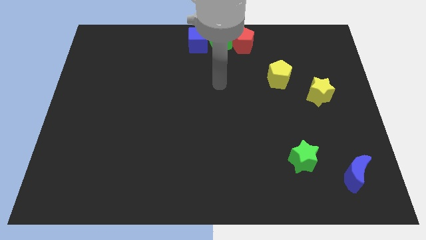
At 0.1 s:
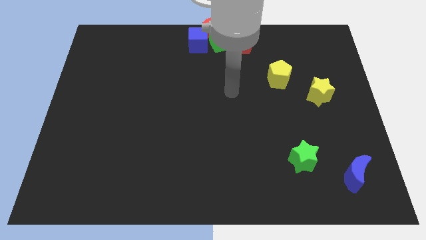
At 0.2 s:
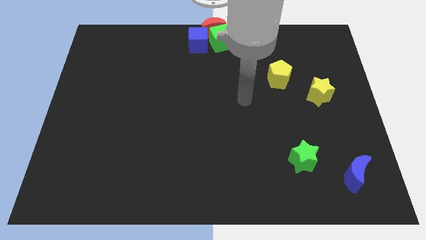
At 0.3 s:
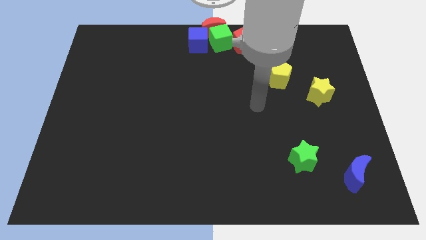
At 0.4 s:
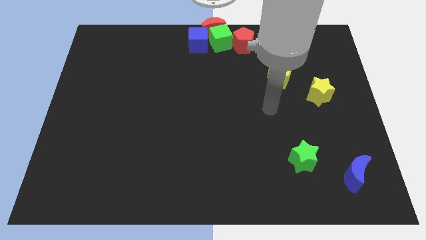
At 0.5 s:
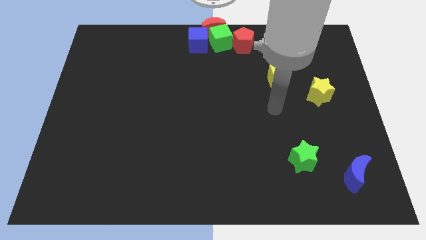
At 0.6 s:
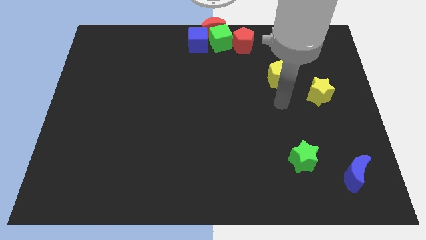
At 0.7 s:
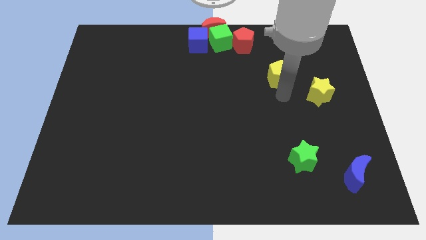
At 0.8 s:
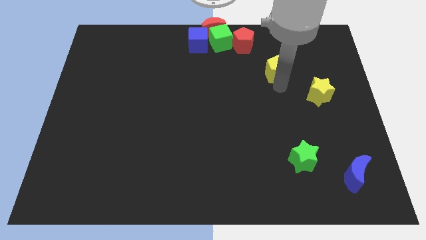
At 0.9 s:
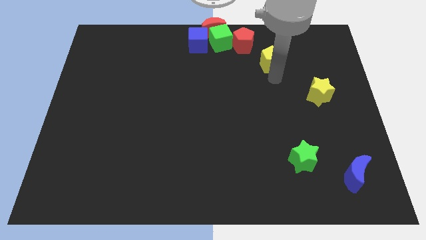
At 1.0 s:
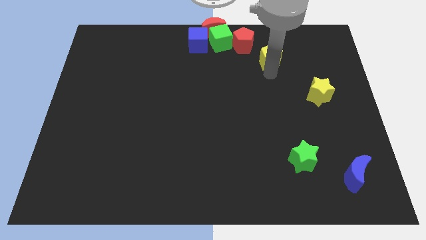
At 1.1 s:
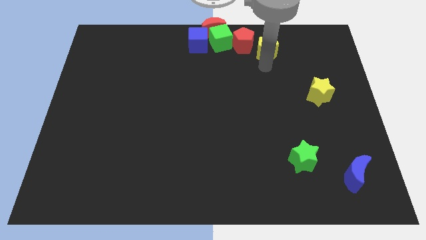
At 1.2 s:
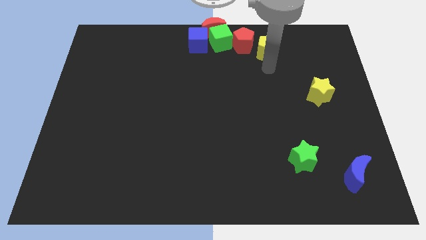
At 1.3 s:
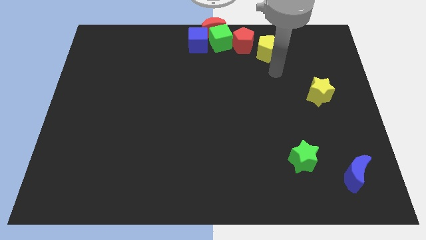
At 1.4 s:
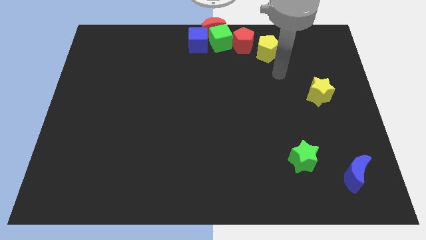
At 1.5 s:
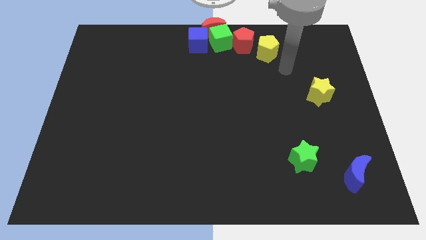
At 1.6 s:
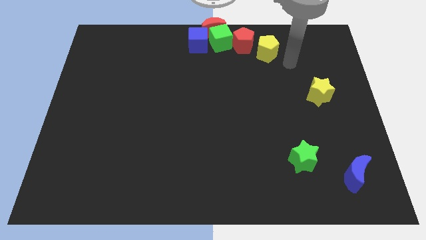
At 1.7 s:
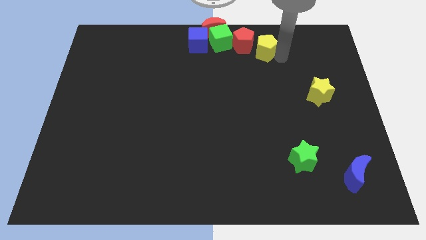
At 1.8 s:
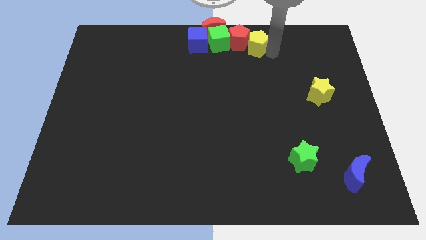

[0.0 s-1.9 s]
push the yellow pentagon to the right of the red pentagon

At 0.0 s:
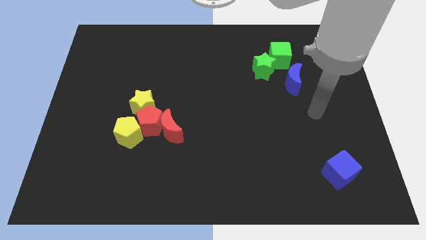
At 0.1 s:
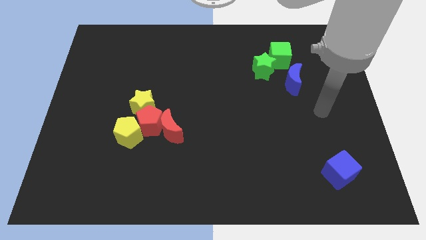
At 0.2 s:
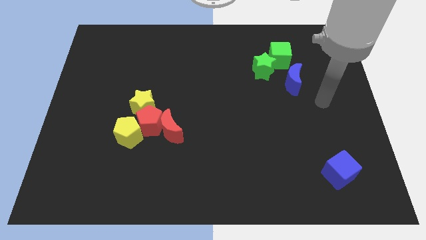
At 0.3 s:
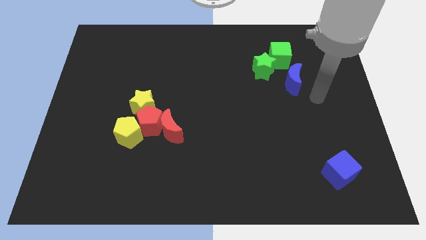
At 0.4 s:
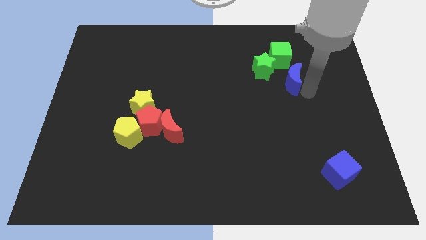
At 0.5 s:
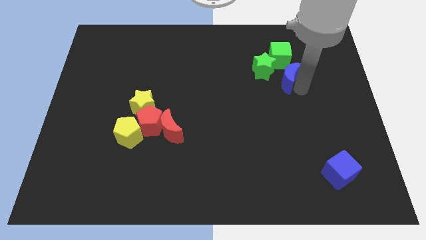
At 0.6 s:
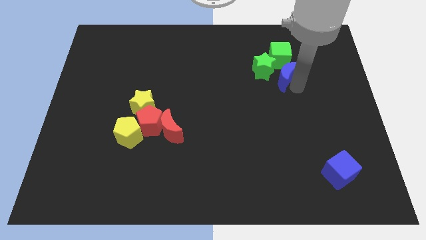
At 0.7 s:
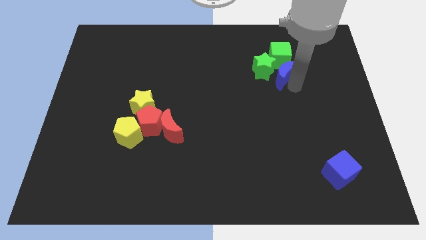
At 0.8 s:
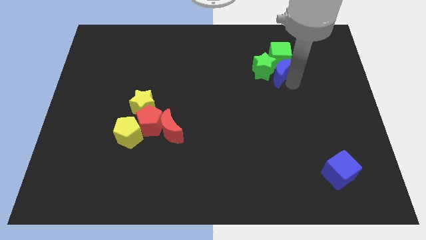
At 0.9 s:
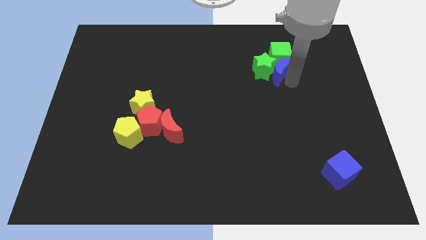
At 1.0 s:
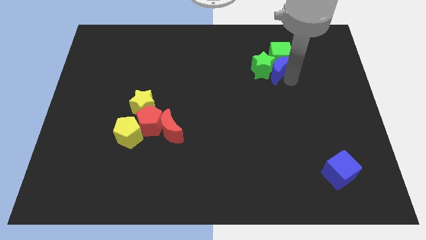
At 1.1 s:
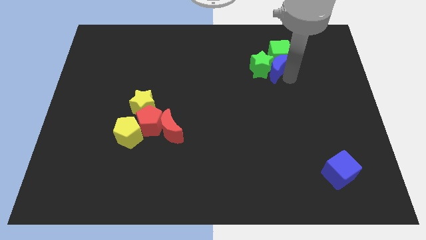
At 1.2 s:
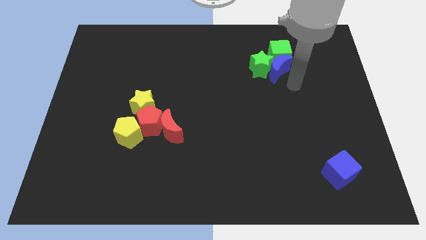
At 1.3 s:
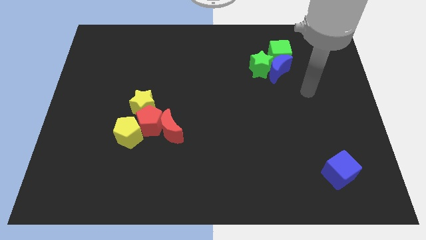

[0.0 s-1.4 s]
place blue moon to the bottom of green cube

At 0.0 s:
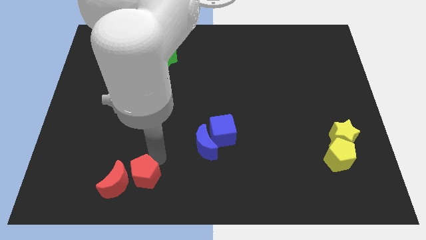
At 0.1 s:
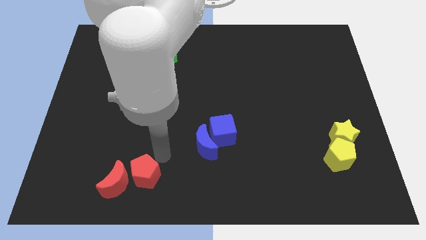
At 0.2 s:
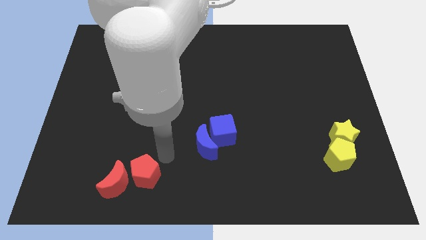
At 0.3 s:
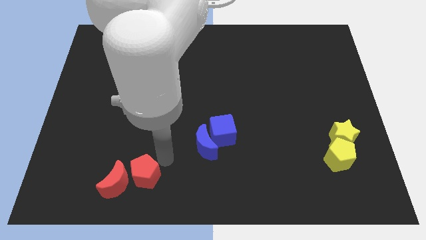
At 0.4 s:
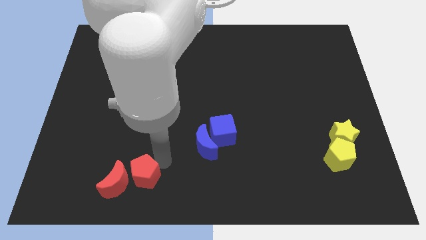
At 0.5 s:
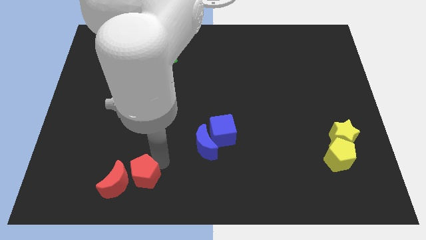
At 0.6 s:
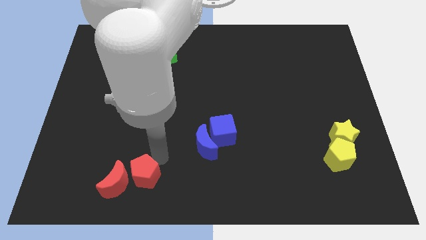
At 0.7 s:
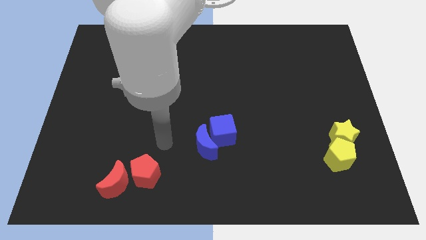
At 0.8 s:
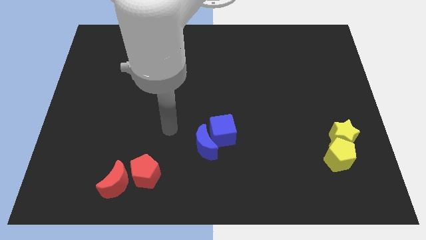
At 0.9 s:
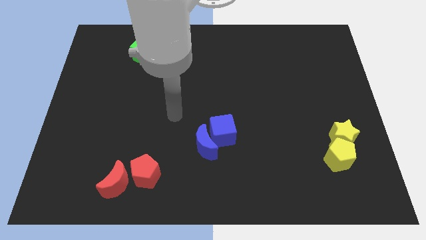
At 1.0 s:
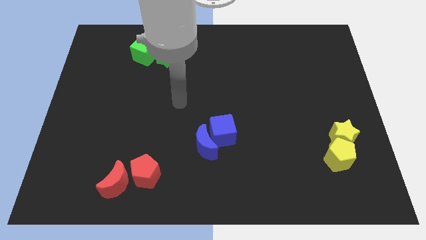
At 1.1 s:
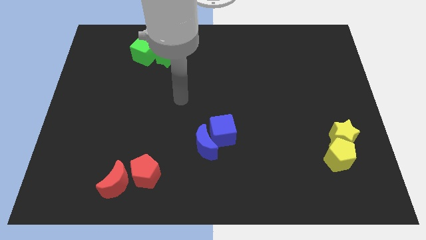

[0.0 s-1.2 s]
move the arm away from the red pentagon

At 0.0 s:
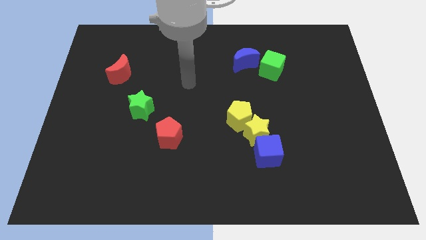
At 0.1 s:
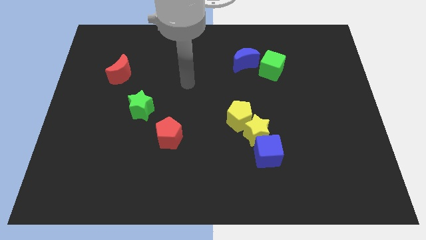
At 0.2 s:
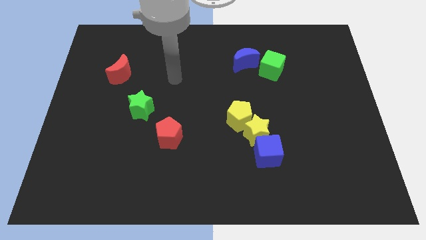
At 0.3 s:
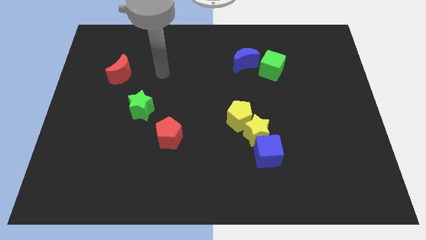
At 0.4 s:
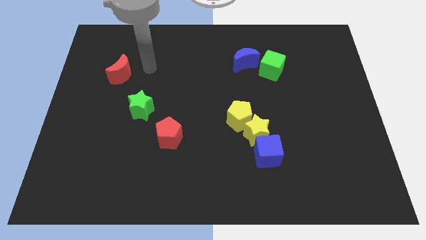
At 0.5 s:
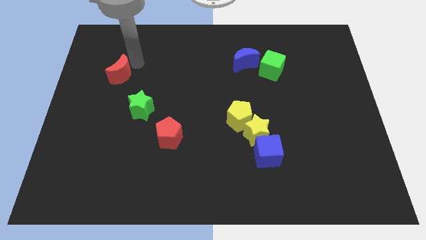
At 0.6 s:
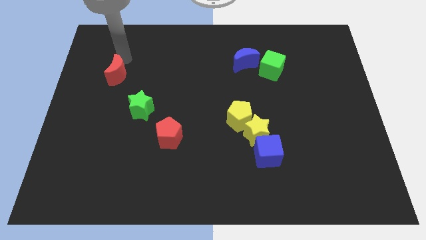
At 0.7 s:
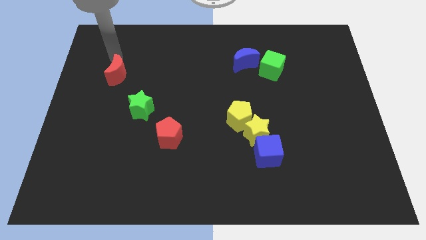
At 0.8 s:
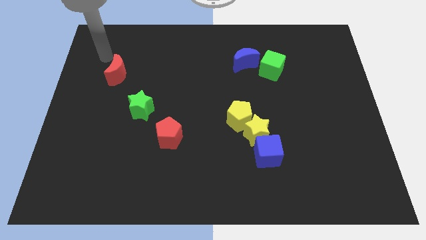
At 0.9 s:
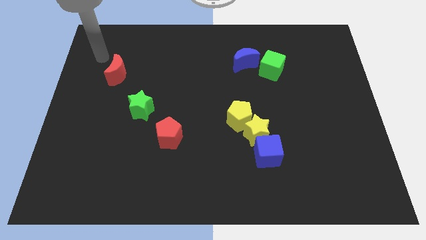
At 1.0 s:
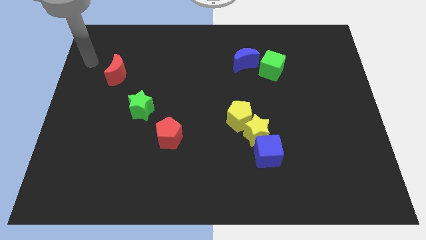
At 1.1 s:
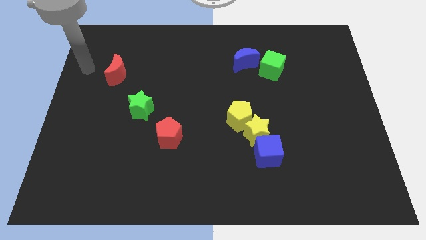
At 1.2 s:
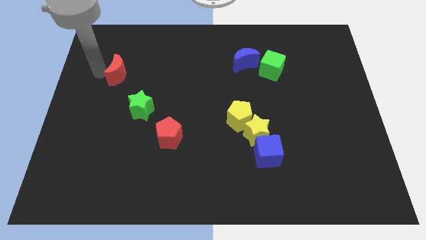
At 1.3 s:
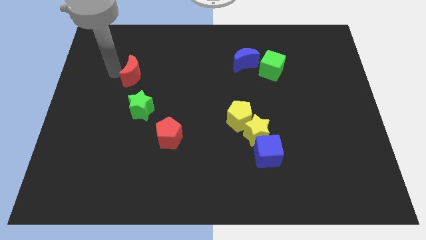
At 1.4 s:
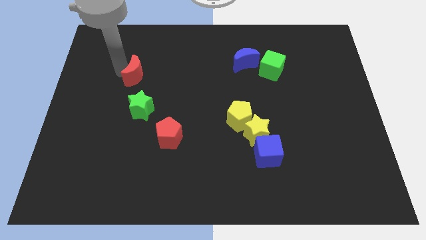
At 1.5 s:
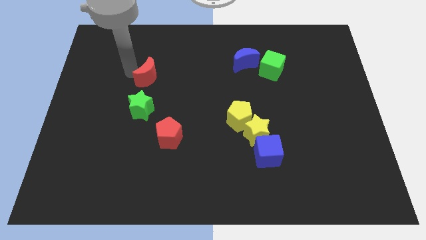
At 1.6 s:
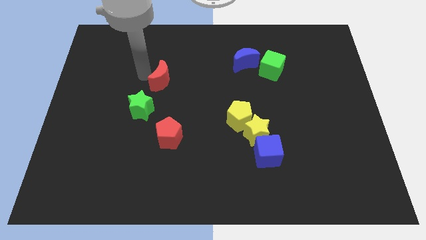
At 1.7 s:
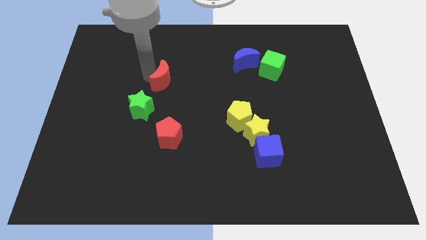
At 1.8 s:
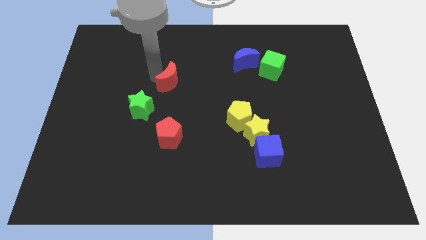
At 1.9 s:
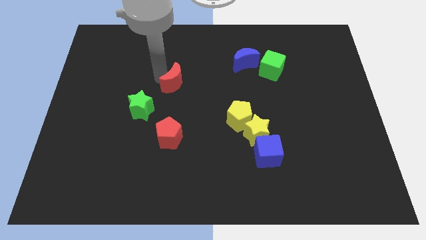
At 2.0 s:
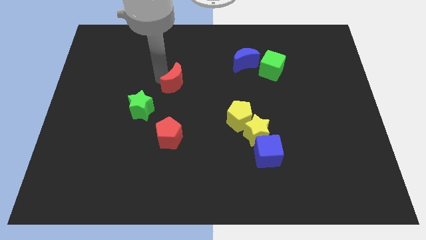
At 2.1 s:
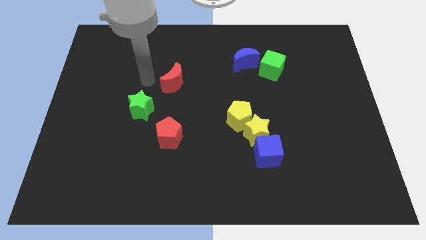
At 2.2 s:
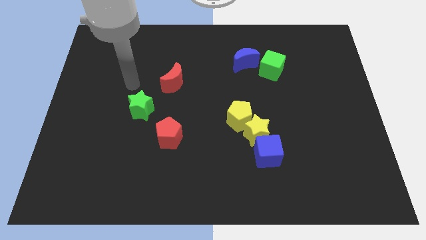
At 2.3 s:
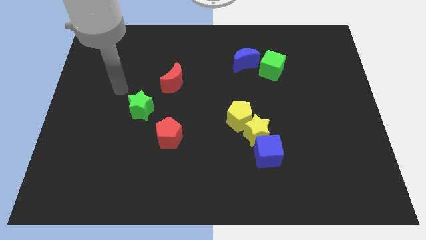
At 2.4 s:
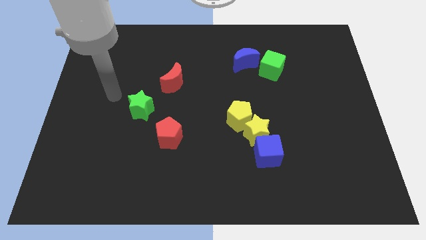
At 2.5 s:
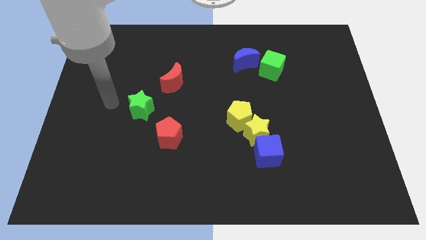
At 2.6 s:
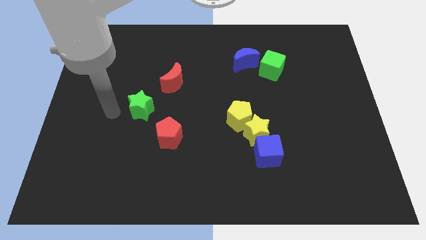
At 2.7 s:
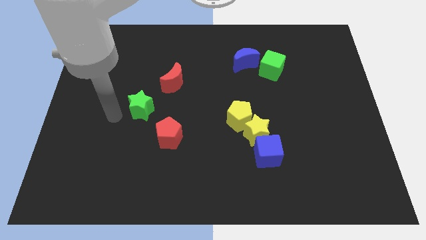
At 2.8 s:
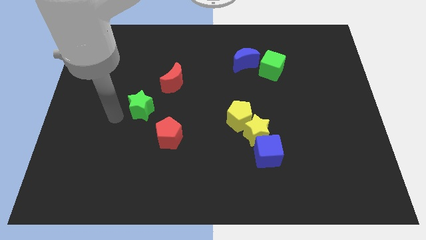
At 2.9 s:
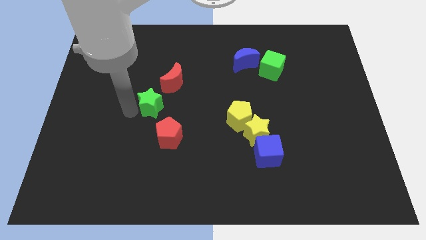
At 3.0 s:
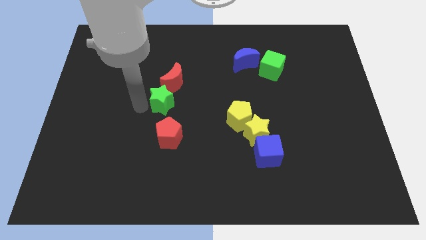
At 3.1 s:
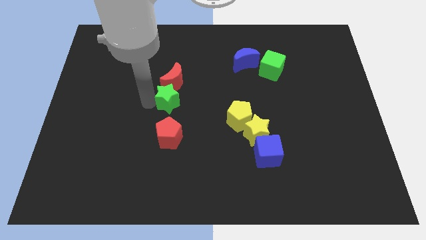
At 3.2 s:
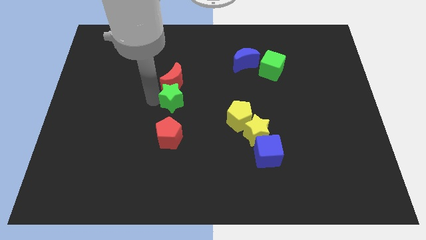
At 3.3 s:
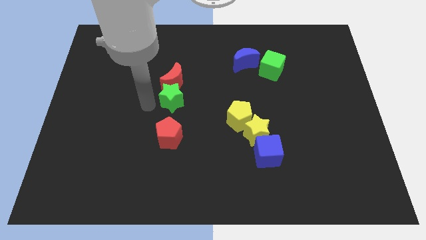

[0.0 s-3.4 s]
move the red crescent above the green star

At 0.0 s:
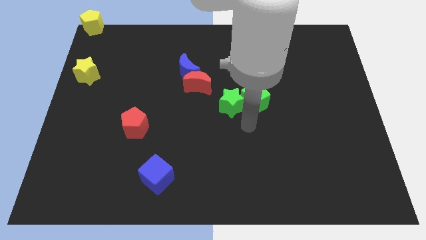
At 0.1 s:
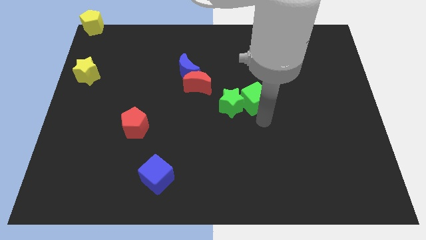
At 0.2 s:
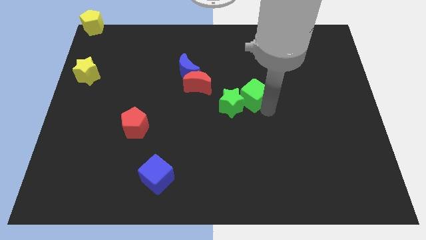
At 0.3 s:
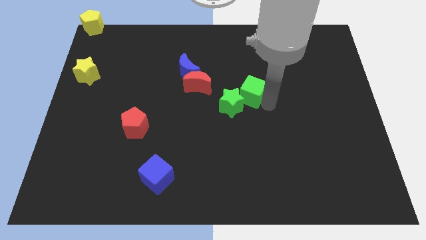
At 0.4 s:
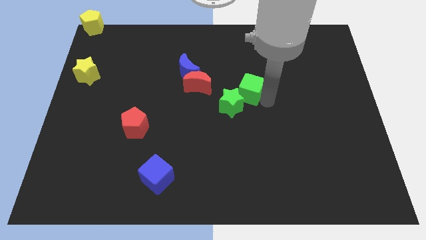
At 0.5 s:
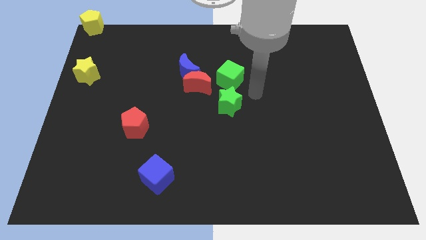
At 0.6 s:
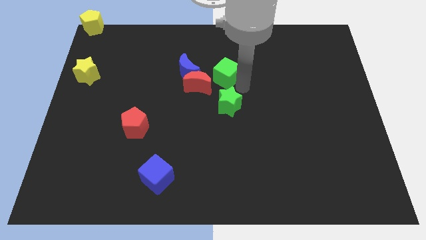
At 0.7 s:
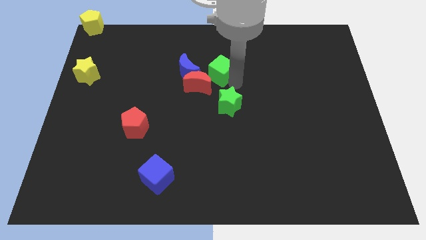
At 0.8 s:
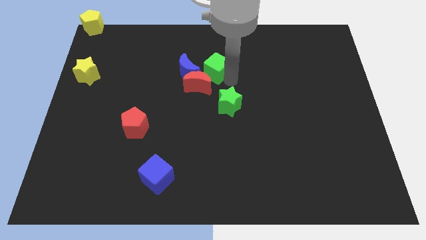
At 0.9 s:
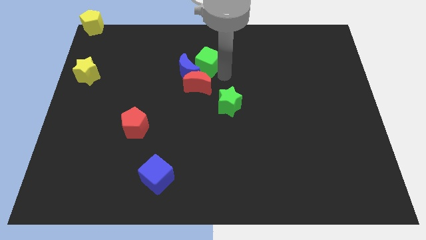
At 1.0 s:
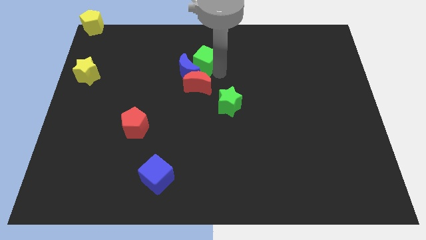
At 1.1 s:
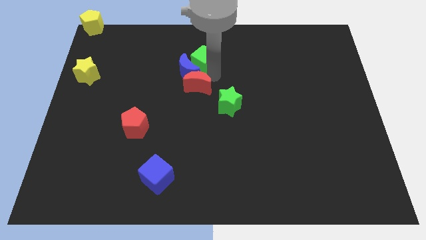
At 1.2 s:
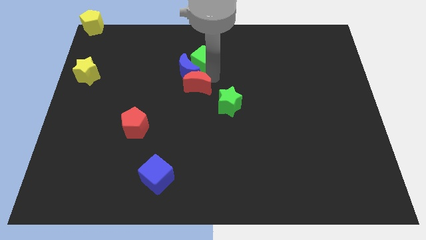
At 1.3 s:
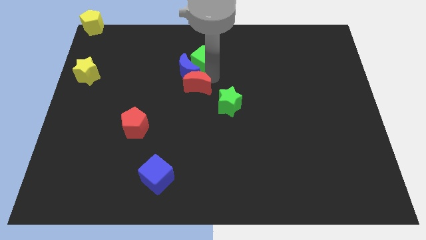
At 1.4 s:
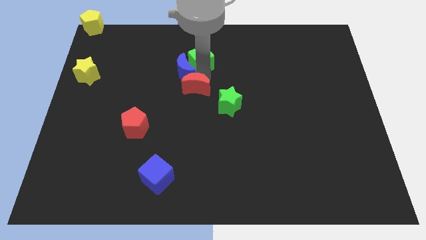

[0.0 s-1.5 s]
push the green cube to the top right side of the blue moon
